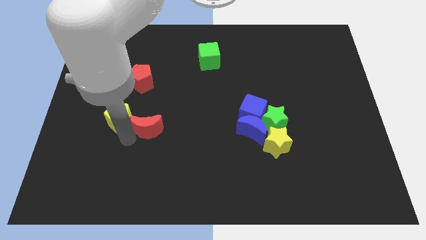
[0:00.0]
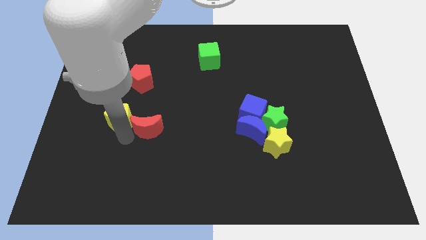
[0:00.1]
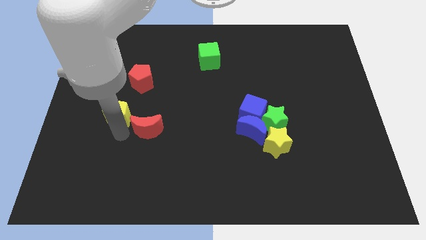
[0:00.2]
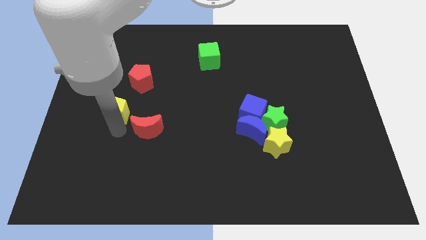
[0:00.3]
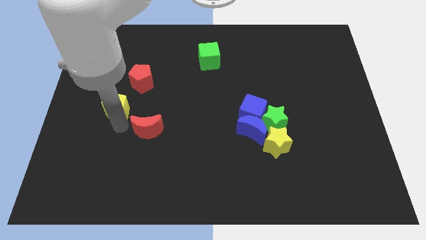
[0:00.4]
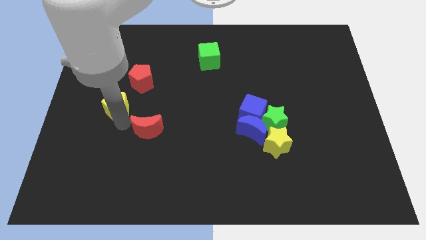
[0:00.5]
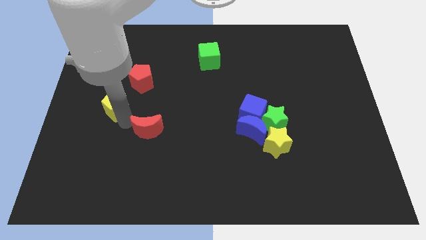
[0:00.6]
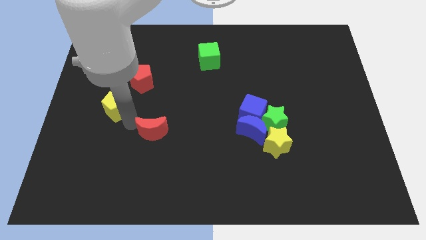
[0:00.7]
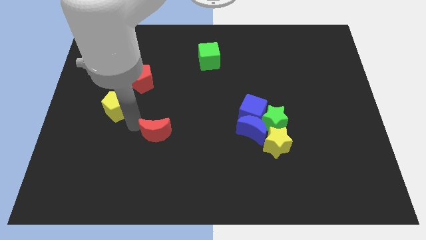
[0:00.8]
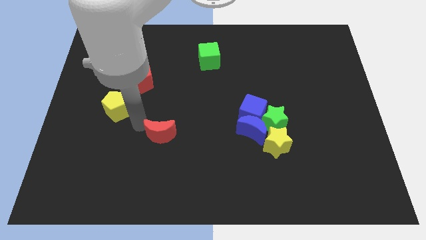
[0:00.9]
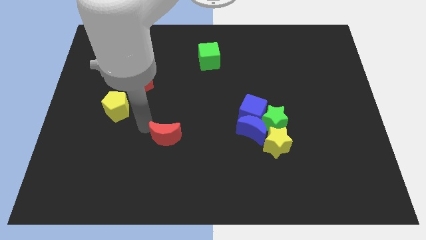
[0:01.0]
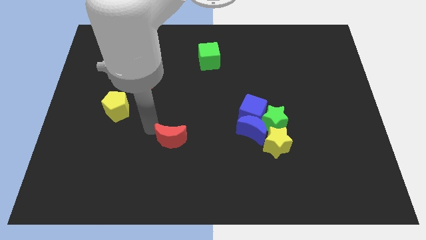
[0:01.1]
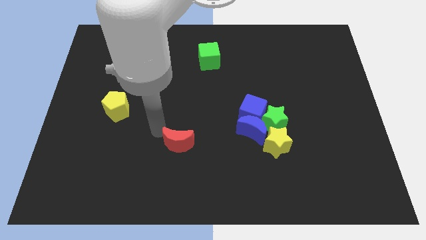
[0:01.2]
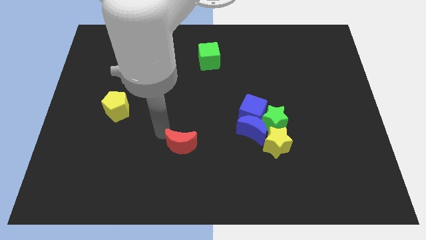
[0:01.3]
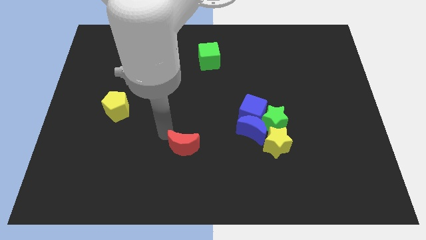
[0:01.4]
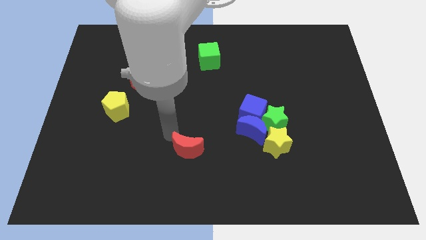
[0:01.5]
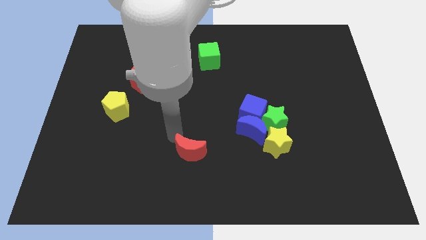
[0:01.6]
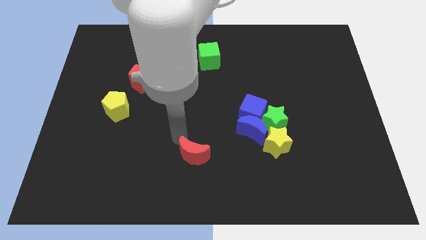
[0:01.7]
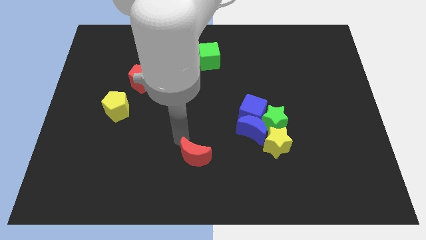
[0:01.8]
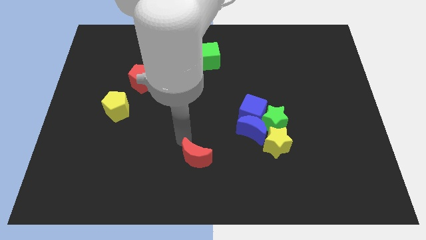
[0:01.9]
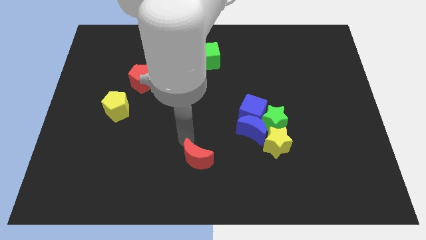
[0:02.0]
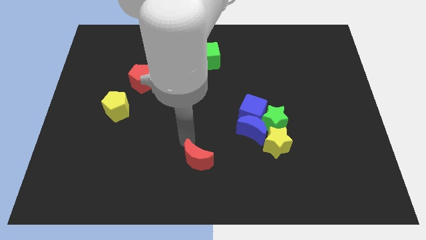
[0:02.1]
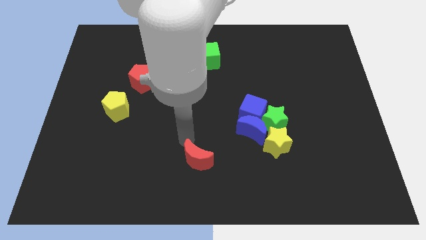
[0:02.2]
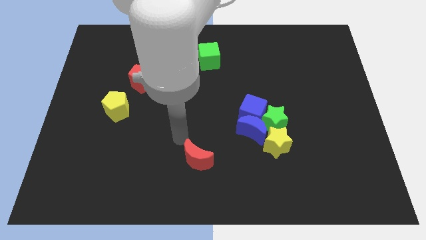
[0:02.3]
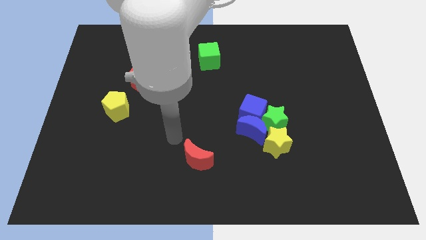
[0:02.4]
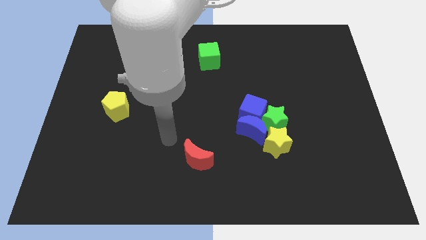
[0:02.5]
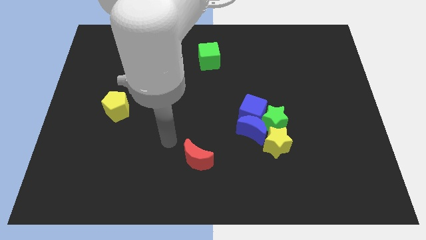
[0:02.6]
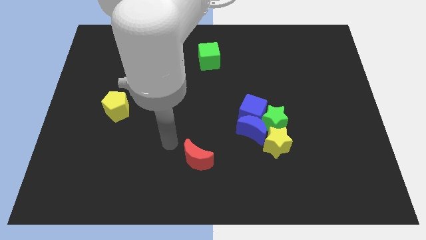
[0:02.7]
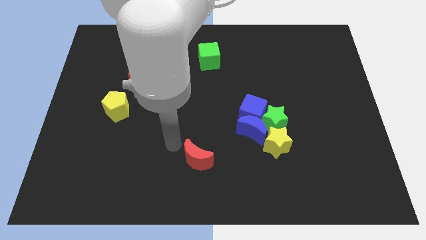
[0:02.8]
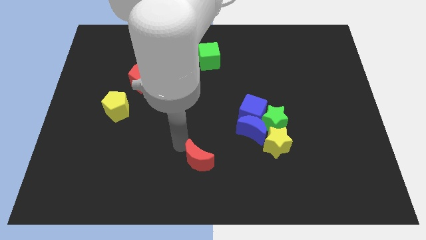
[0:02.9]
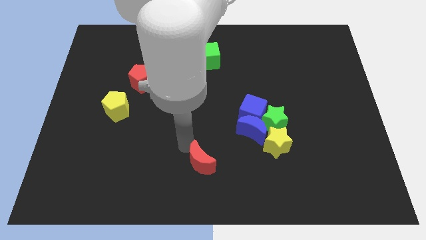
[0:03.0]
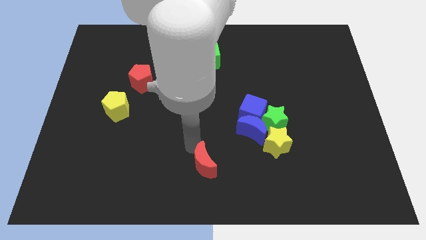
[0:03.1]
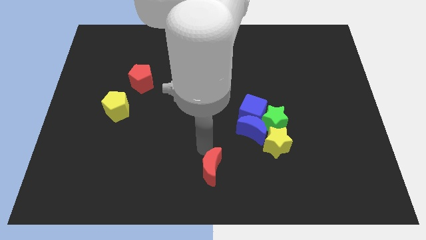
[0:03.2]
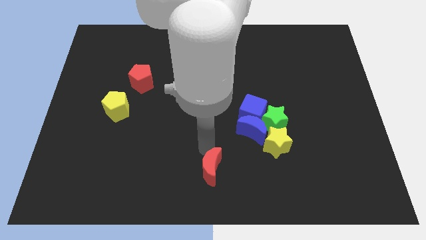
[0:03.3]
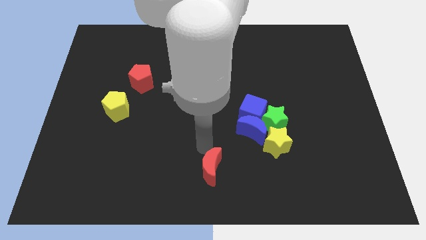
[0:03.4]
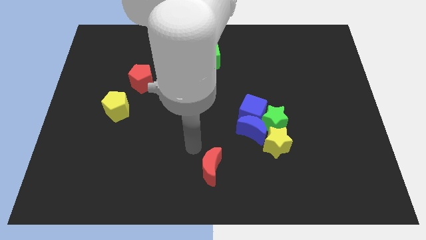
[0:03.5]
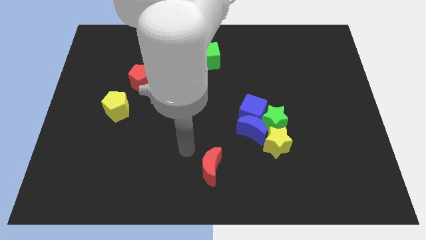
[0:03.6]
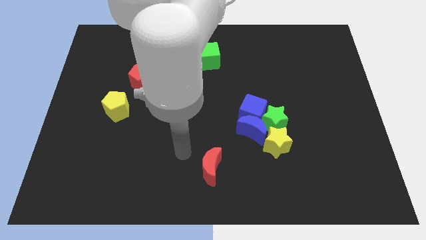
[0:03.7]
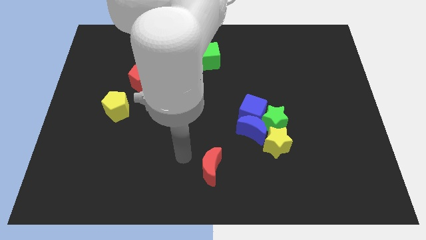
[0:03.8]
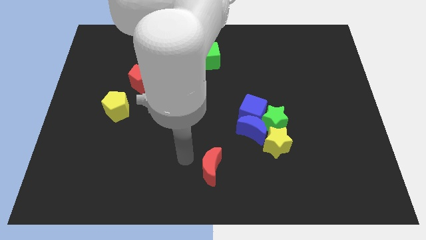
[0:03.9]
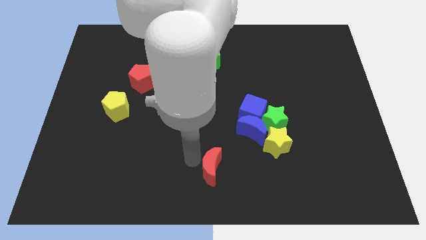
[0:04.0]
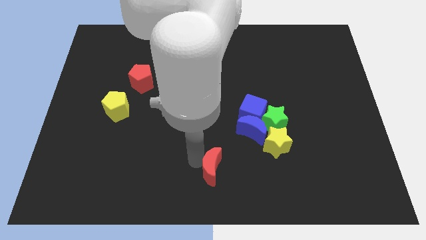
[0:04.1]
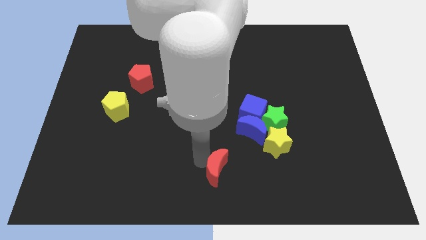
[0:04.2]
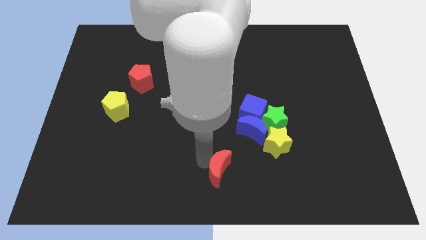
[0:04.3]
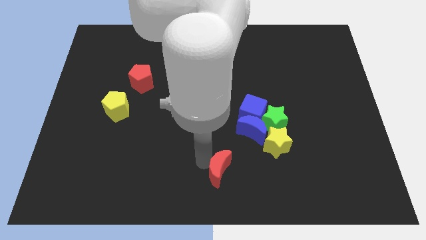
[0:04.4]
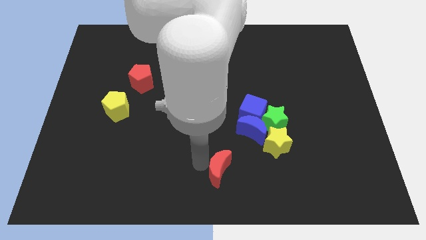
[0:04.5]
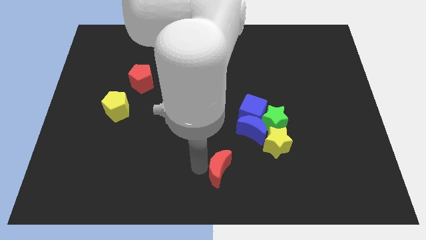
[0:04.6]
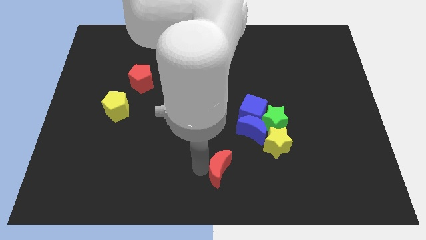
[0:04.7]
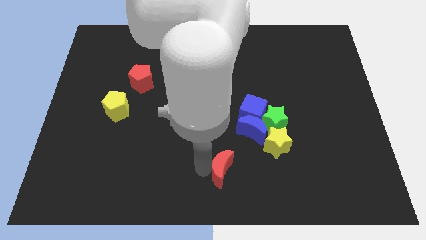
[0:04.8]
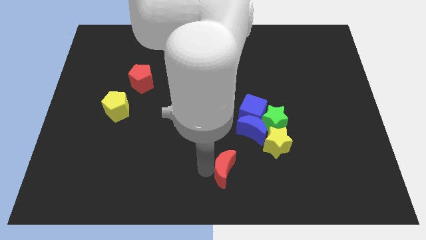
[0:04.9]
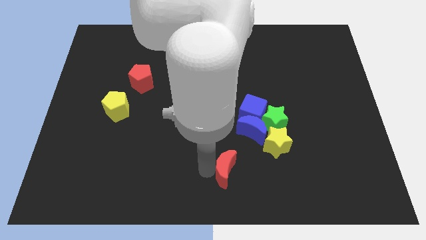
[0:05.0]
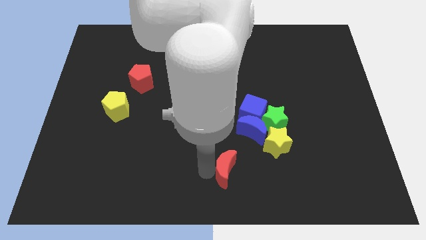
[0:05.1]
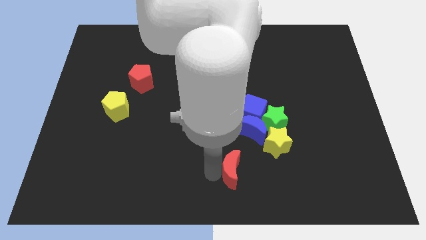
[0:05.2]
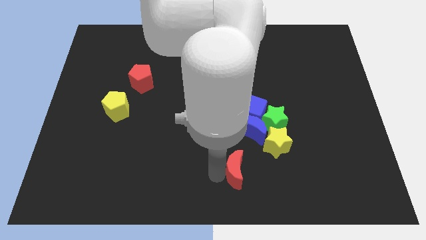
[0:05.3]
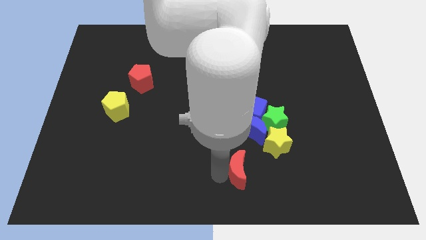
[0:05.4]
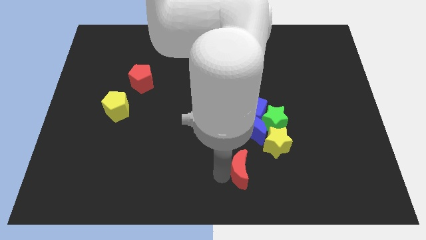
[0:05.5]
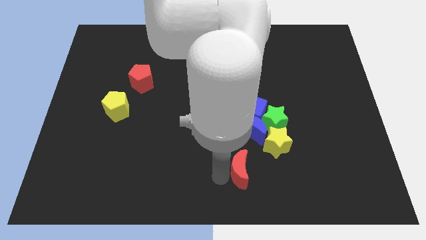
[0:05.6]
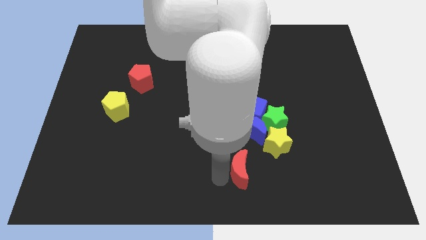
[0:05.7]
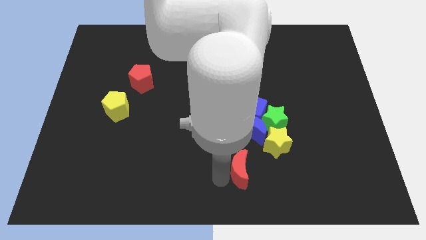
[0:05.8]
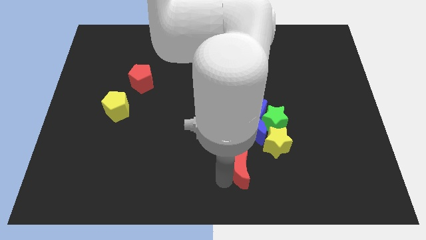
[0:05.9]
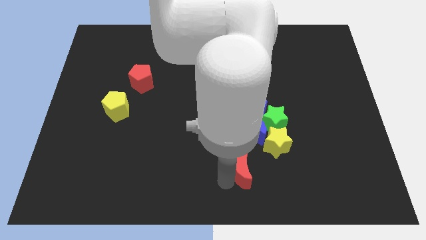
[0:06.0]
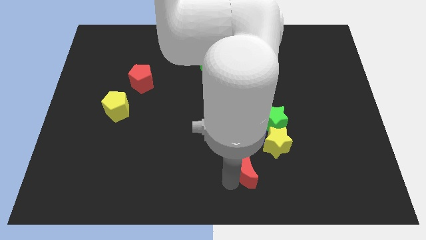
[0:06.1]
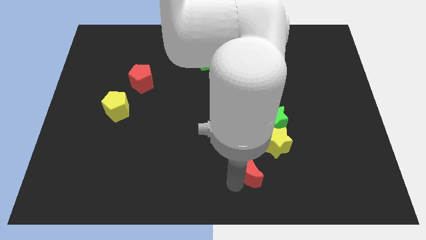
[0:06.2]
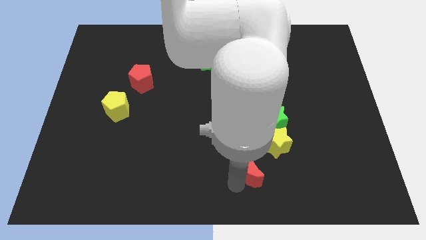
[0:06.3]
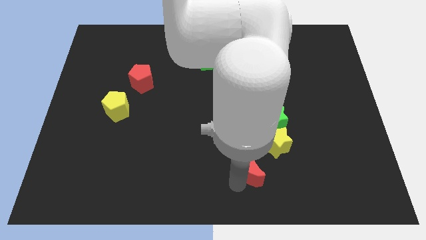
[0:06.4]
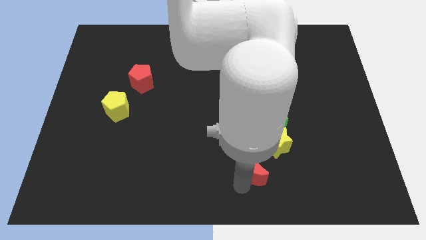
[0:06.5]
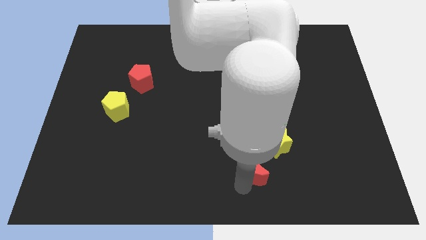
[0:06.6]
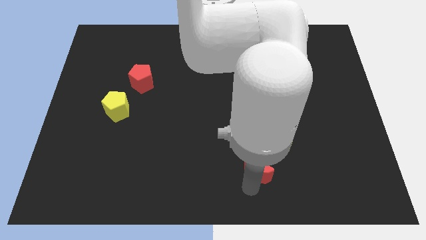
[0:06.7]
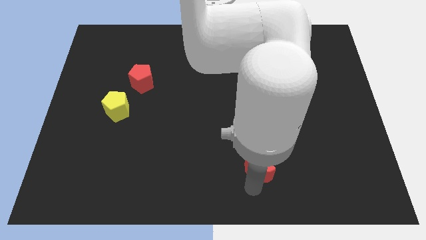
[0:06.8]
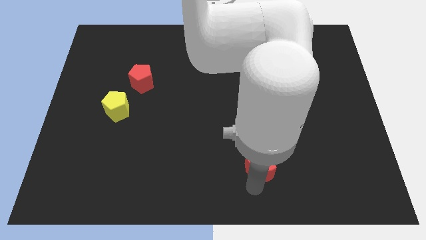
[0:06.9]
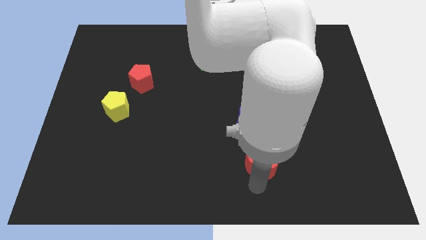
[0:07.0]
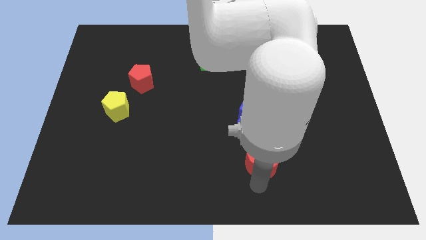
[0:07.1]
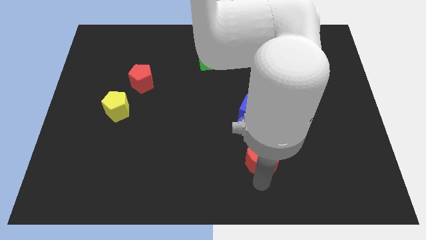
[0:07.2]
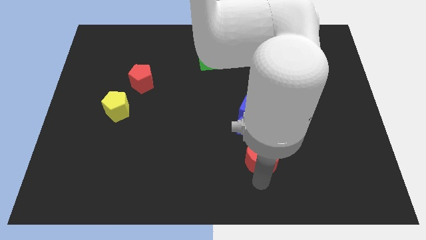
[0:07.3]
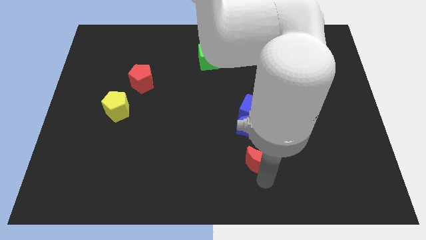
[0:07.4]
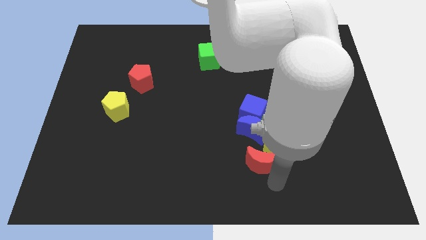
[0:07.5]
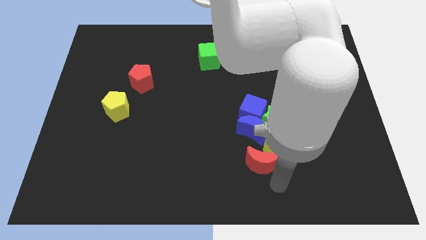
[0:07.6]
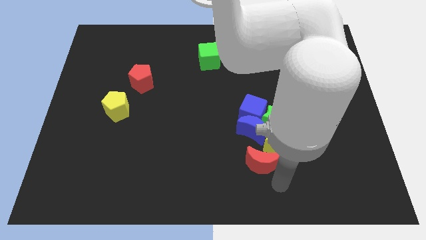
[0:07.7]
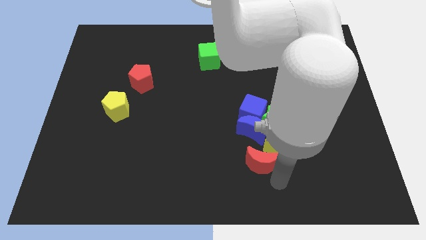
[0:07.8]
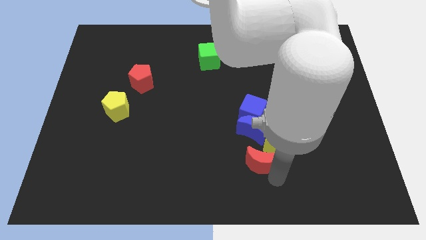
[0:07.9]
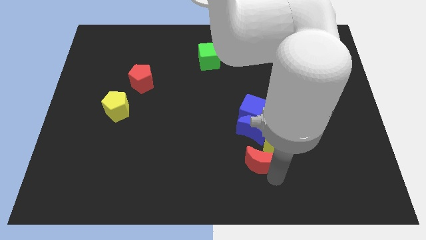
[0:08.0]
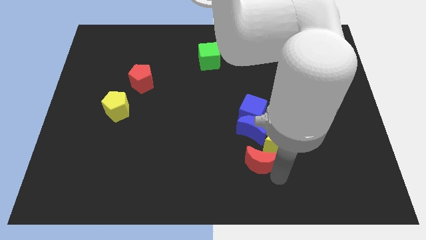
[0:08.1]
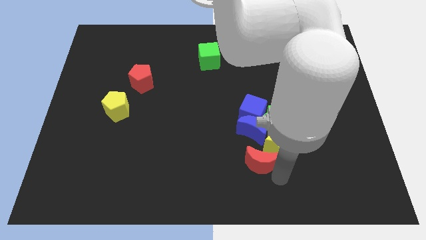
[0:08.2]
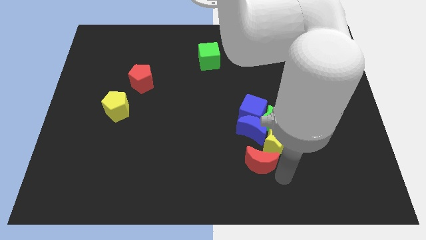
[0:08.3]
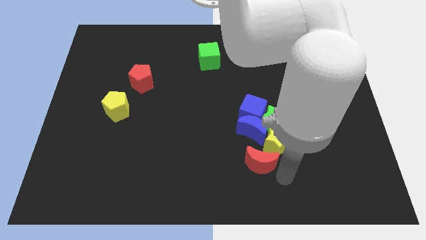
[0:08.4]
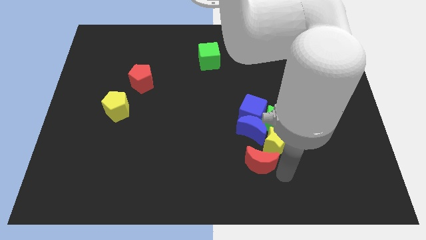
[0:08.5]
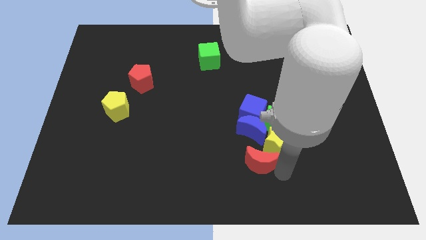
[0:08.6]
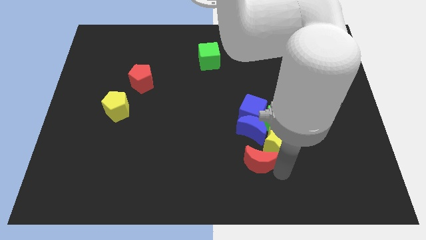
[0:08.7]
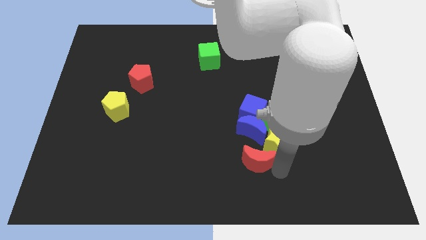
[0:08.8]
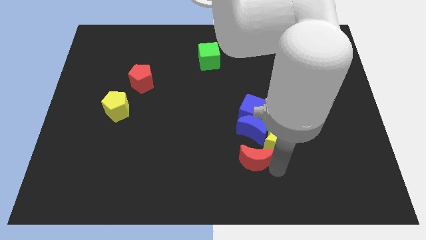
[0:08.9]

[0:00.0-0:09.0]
move the red crescent to the bottom left of the yellow star

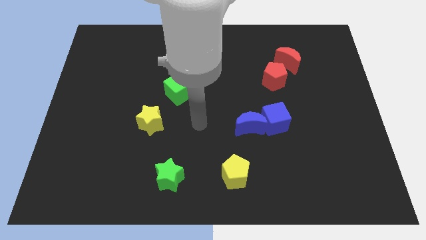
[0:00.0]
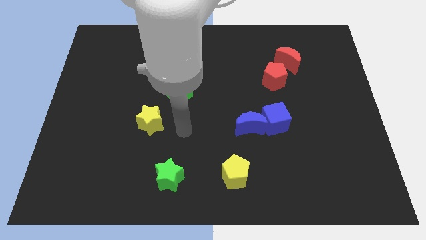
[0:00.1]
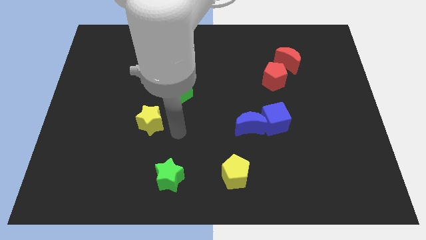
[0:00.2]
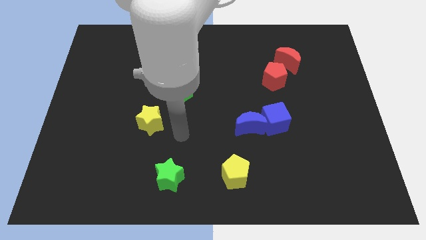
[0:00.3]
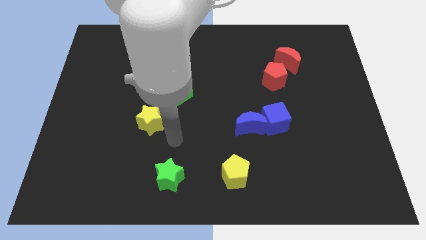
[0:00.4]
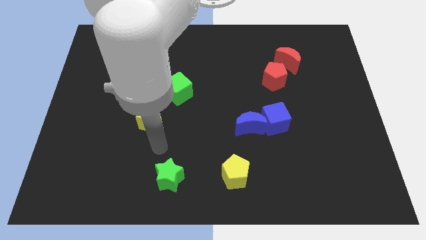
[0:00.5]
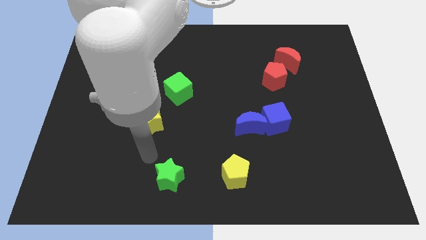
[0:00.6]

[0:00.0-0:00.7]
place your arm above green star
